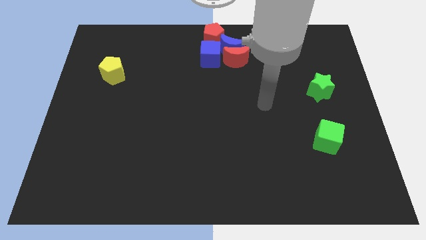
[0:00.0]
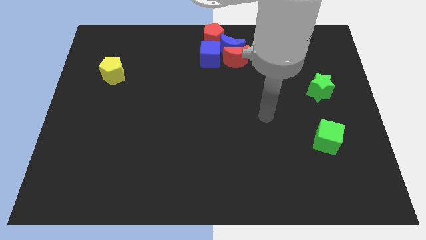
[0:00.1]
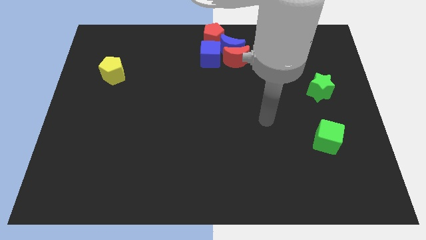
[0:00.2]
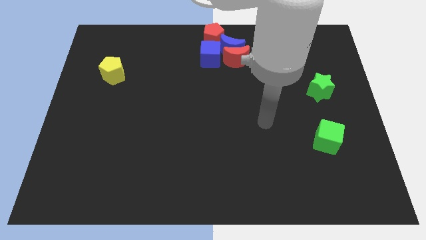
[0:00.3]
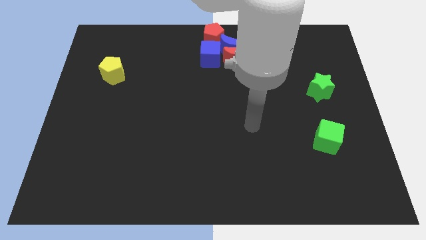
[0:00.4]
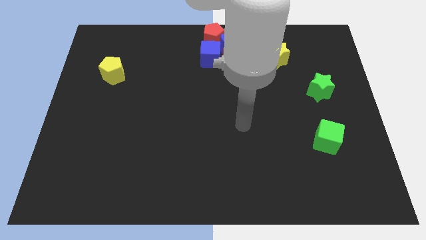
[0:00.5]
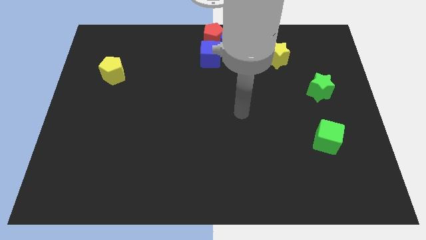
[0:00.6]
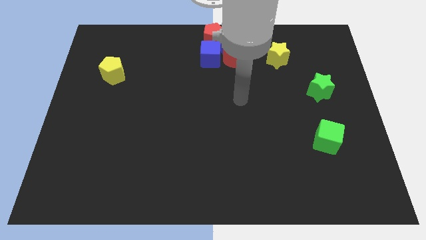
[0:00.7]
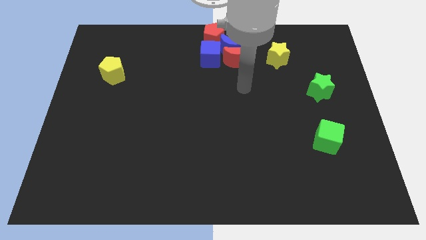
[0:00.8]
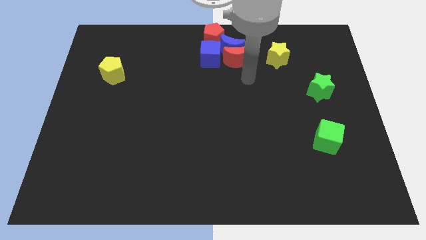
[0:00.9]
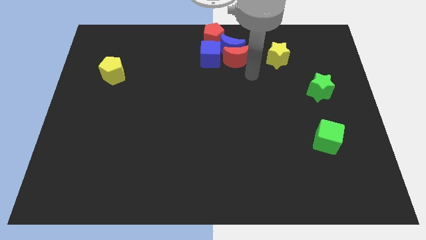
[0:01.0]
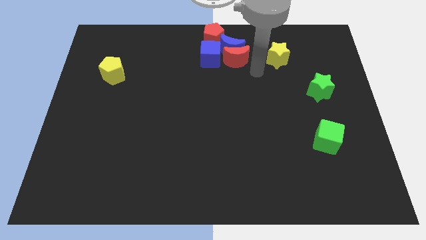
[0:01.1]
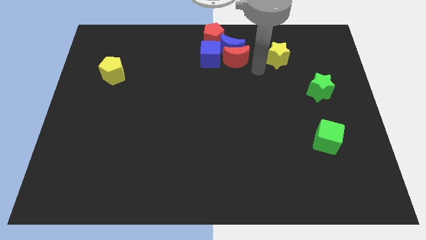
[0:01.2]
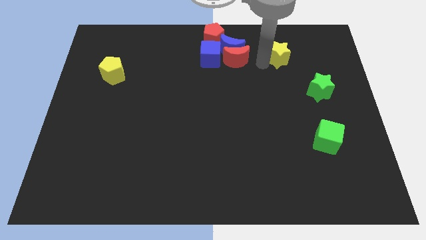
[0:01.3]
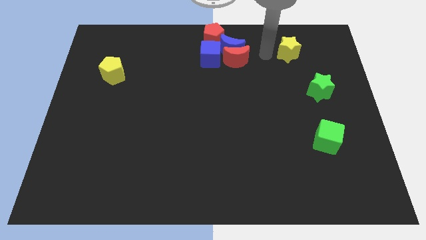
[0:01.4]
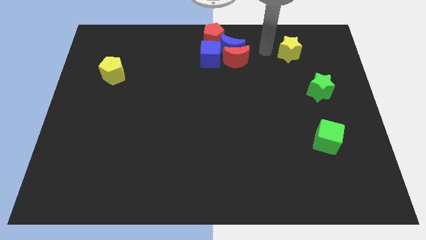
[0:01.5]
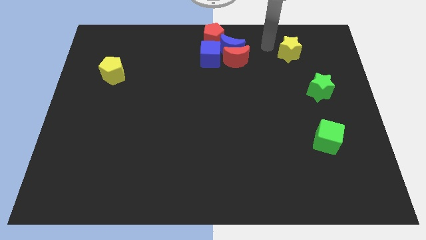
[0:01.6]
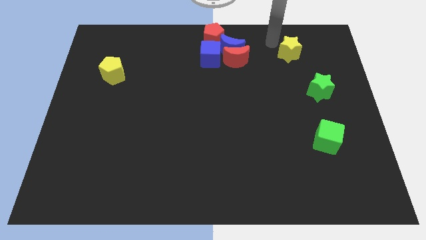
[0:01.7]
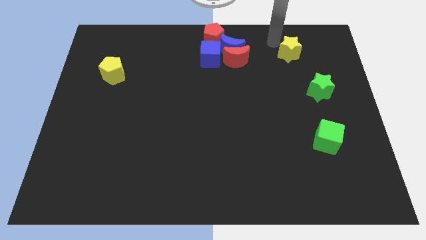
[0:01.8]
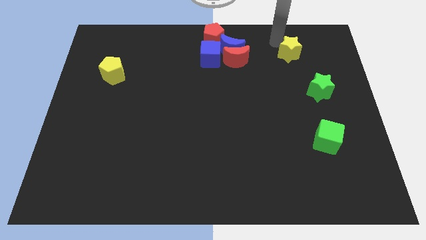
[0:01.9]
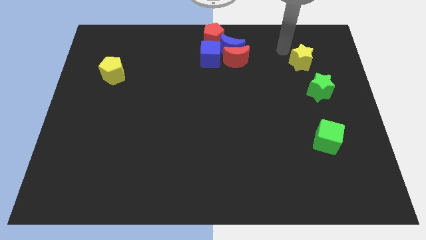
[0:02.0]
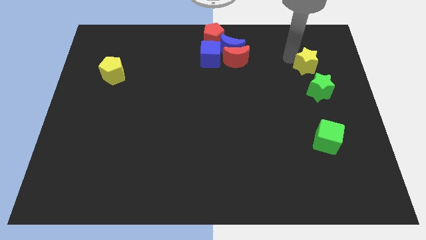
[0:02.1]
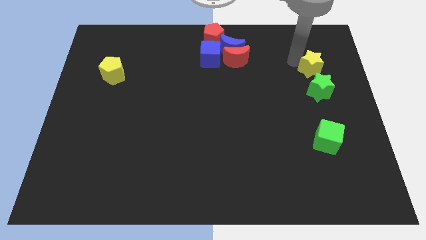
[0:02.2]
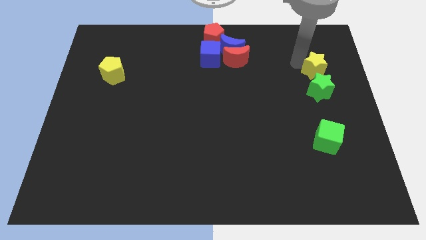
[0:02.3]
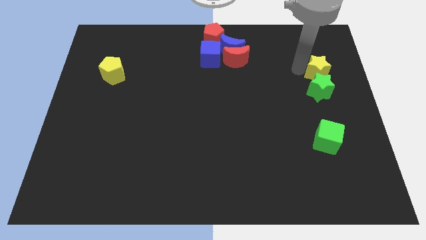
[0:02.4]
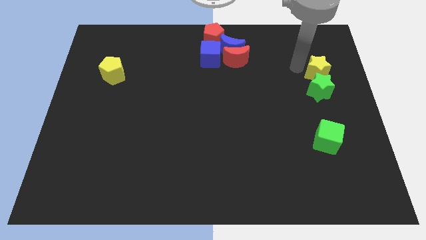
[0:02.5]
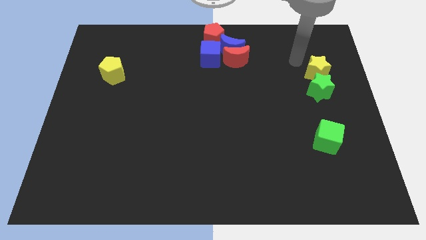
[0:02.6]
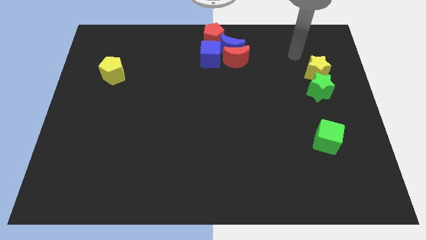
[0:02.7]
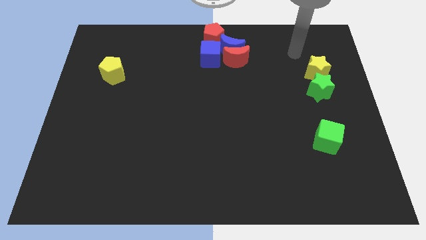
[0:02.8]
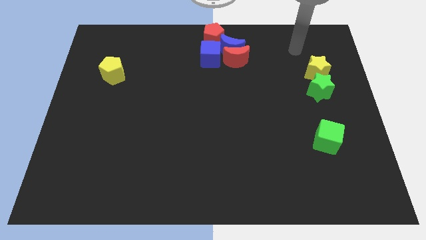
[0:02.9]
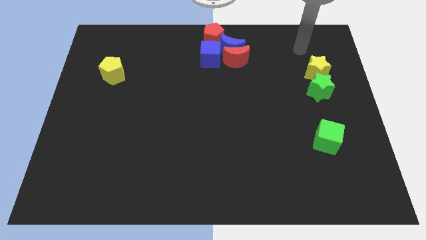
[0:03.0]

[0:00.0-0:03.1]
move the yellow star to the top of the green star

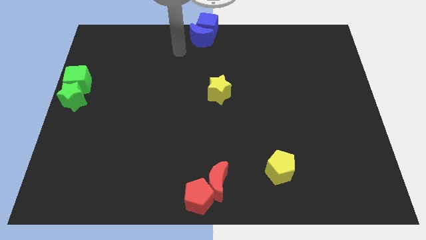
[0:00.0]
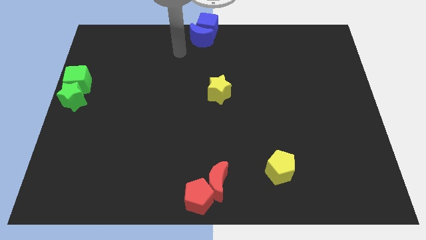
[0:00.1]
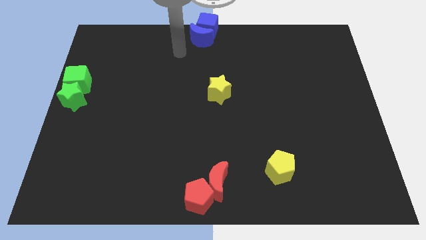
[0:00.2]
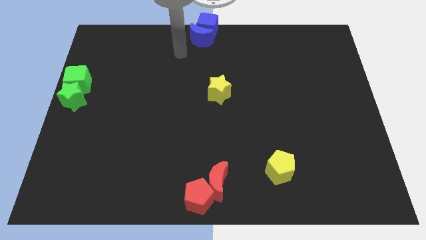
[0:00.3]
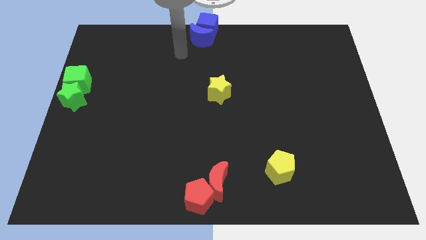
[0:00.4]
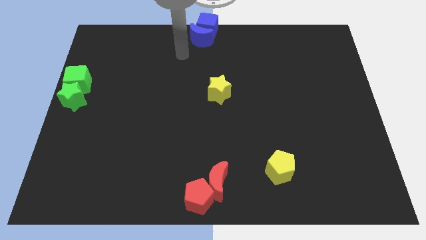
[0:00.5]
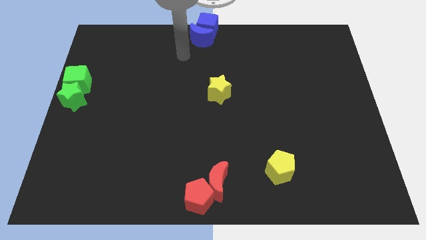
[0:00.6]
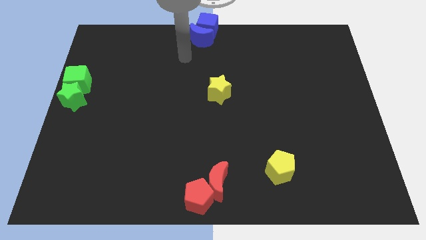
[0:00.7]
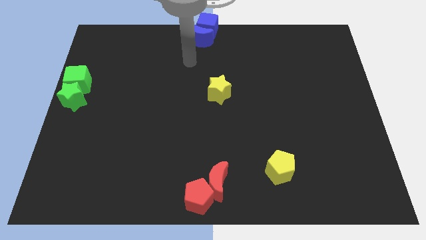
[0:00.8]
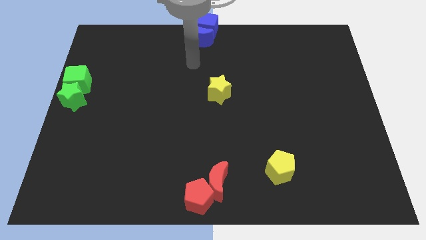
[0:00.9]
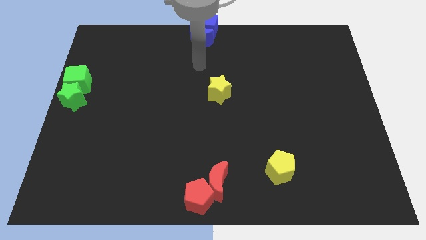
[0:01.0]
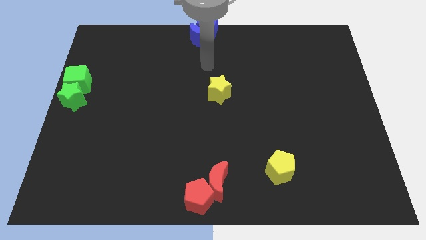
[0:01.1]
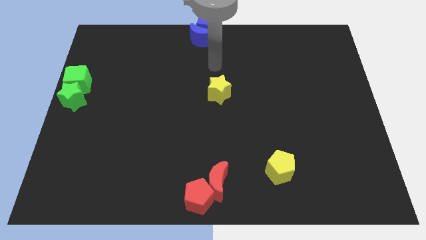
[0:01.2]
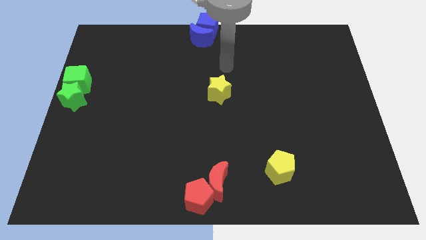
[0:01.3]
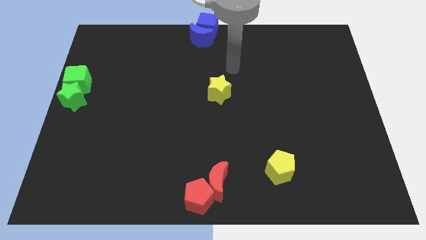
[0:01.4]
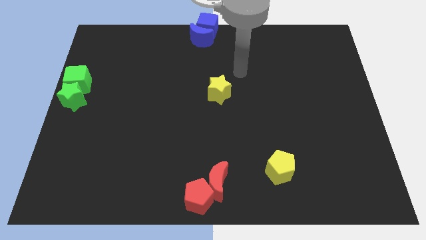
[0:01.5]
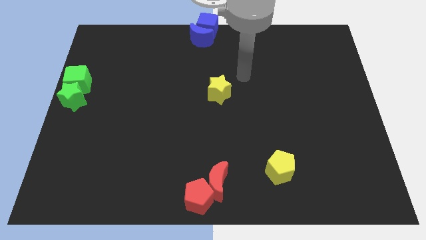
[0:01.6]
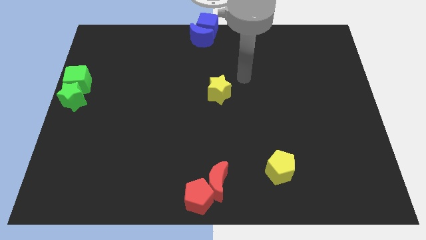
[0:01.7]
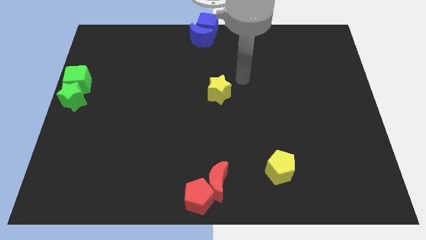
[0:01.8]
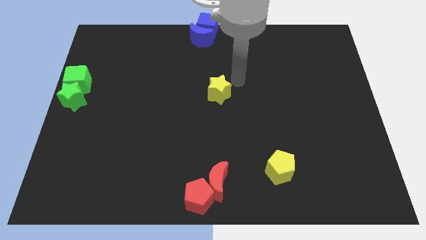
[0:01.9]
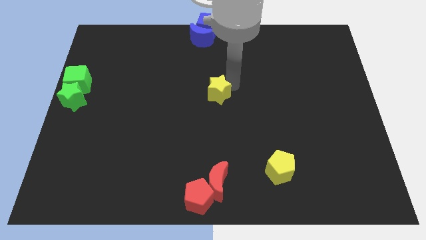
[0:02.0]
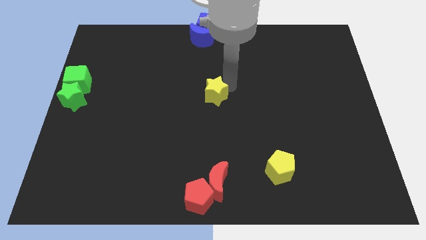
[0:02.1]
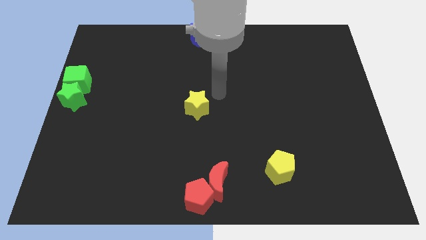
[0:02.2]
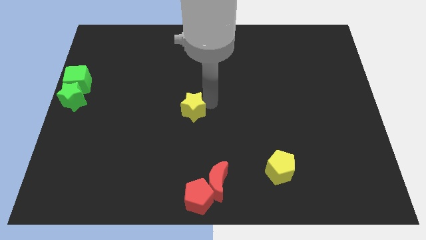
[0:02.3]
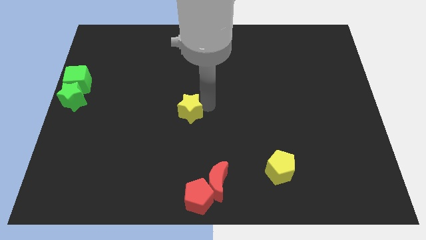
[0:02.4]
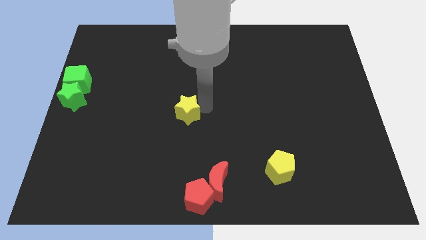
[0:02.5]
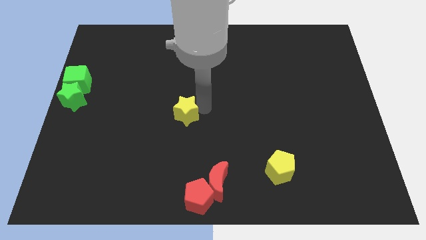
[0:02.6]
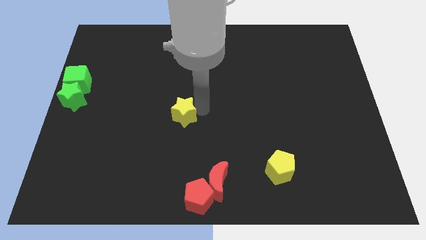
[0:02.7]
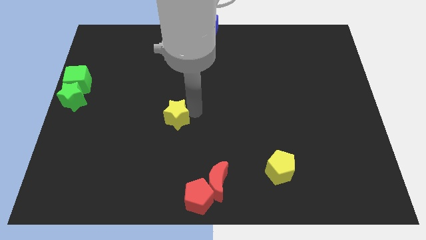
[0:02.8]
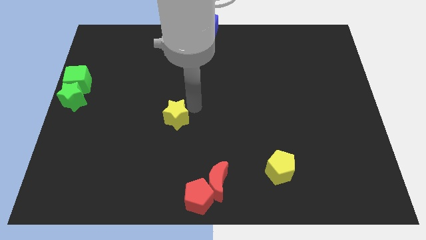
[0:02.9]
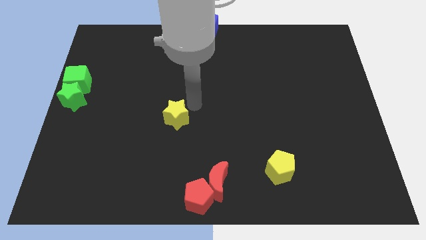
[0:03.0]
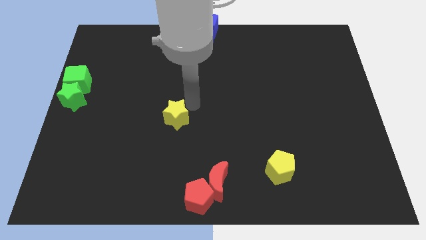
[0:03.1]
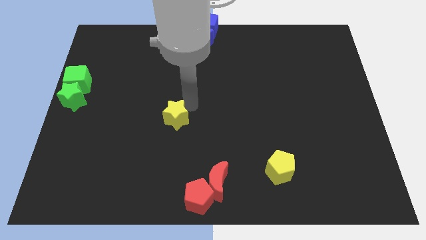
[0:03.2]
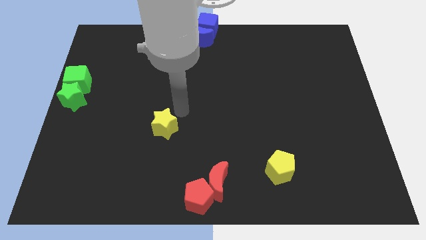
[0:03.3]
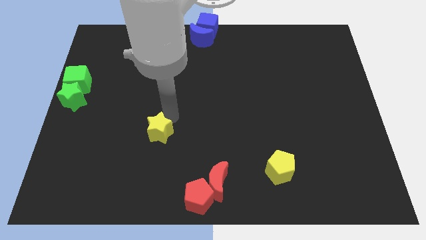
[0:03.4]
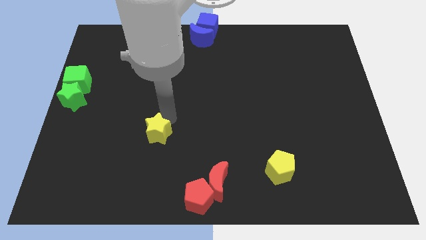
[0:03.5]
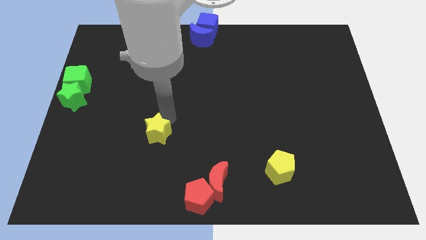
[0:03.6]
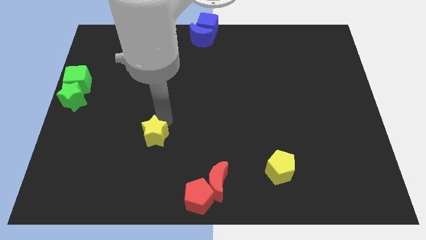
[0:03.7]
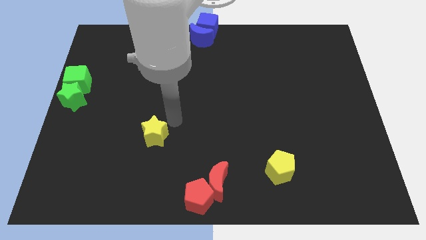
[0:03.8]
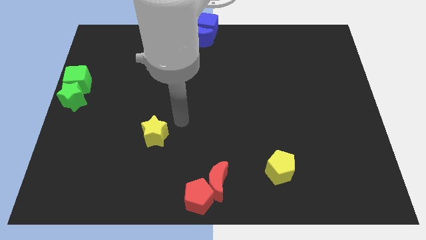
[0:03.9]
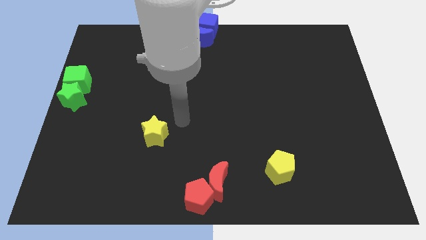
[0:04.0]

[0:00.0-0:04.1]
move the yellow star diagonally top left to the red blocks

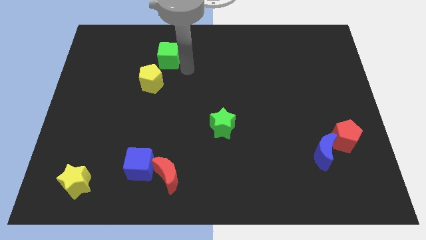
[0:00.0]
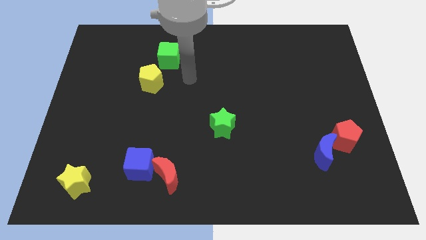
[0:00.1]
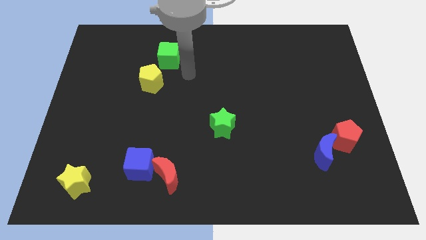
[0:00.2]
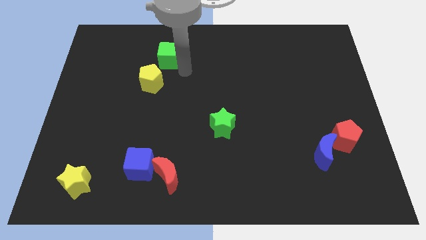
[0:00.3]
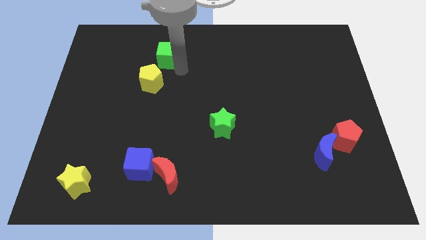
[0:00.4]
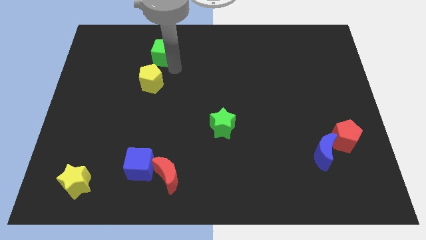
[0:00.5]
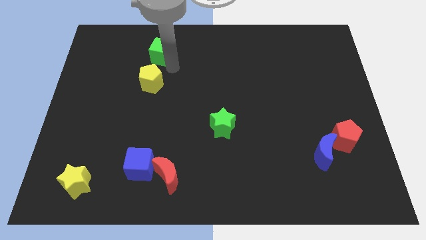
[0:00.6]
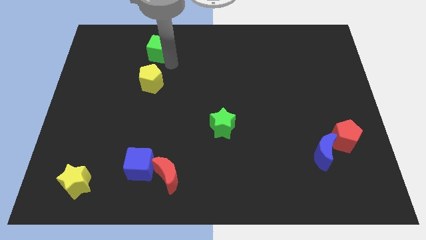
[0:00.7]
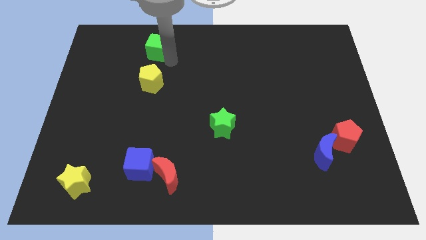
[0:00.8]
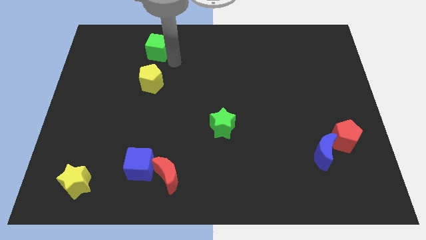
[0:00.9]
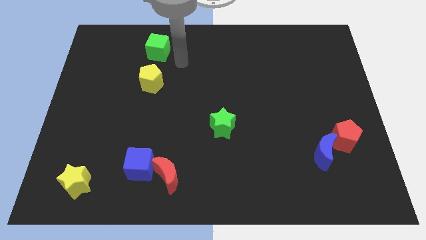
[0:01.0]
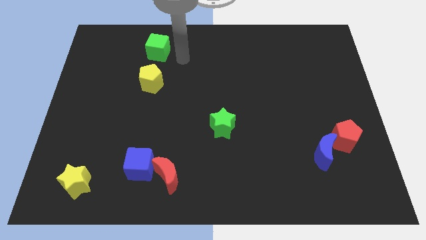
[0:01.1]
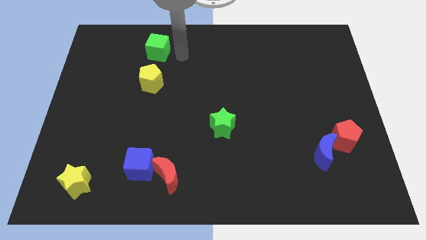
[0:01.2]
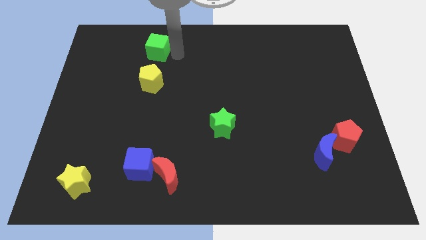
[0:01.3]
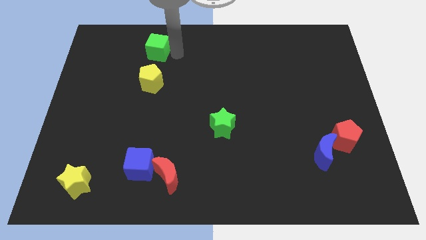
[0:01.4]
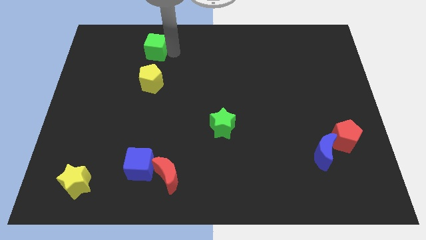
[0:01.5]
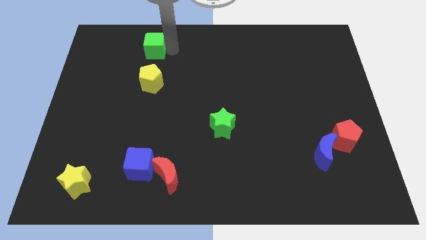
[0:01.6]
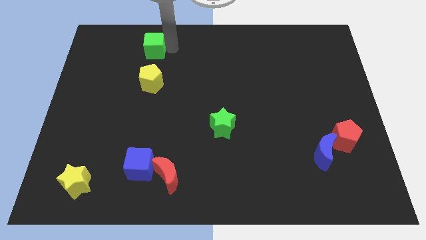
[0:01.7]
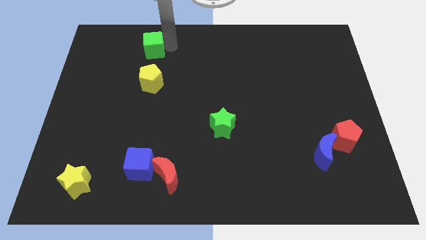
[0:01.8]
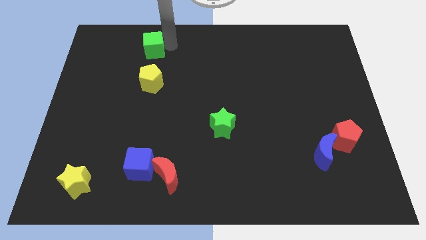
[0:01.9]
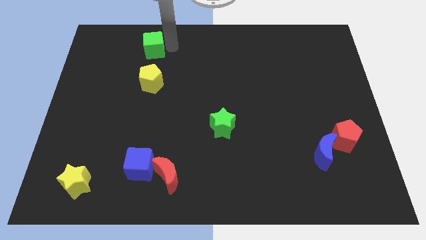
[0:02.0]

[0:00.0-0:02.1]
place green cube above the yellow pentagon
